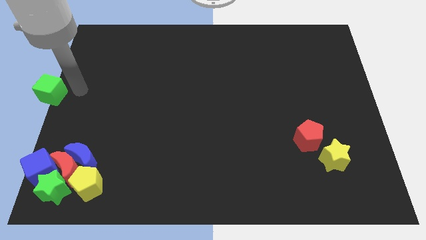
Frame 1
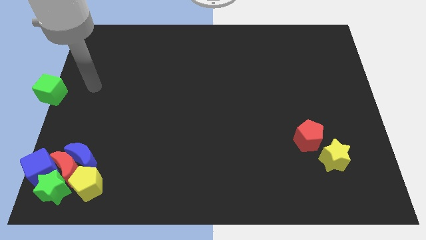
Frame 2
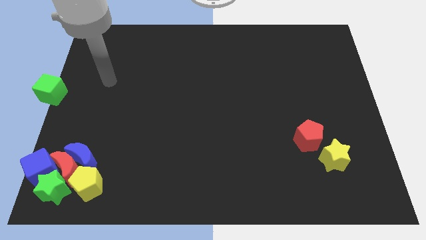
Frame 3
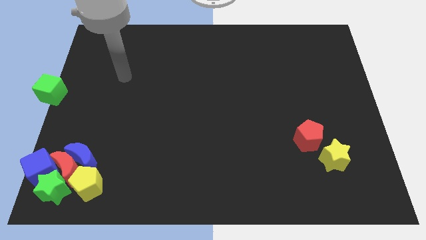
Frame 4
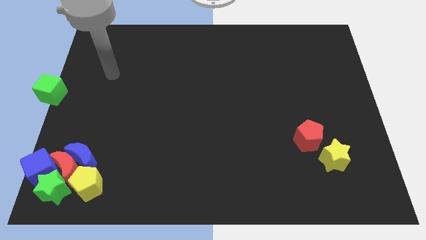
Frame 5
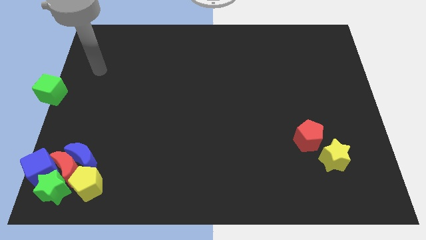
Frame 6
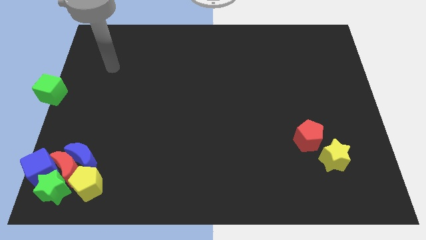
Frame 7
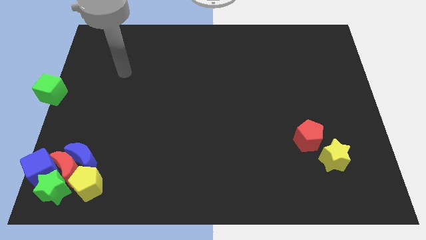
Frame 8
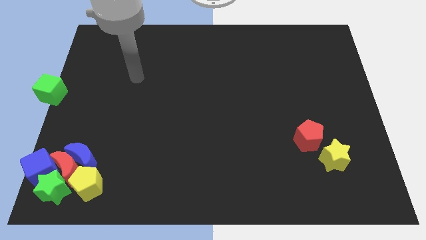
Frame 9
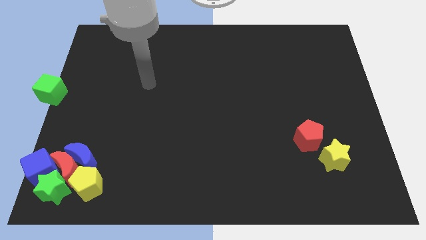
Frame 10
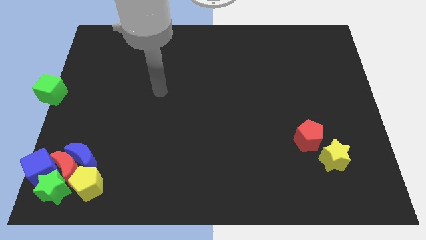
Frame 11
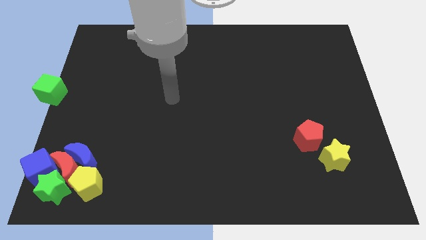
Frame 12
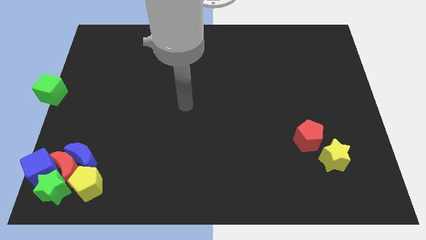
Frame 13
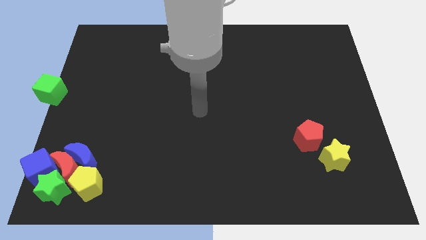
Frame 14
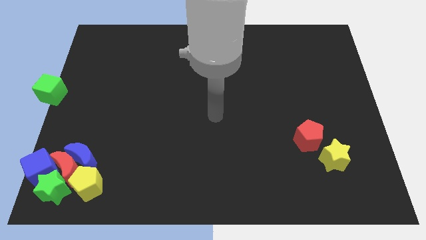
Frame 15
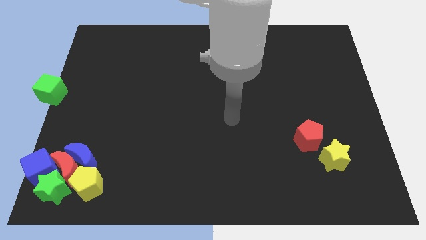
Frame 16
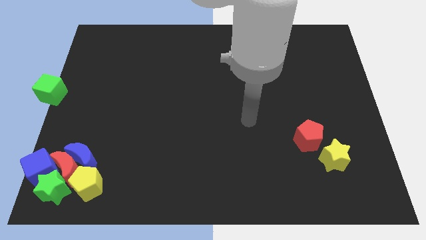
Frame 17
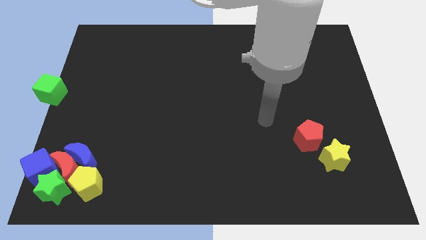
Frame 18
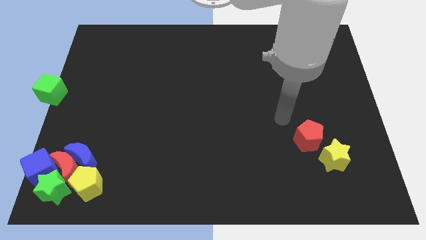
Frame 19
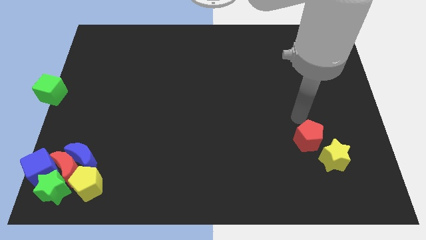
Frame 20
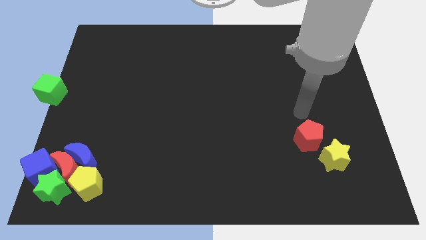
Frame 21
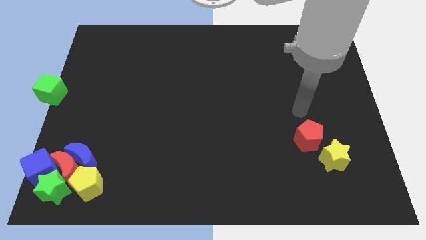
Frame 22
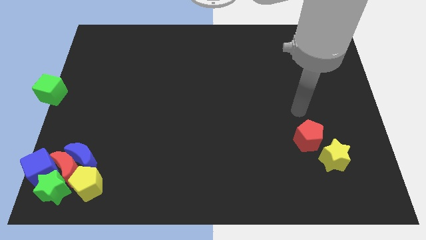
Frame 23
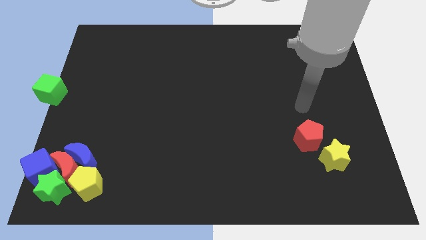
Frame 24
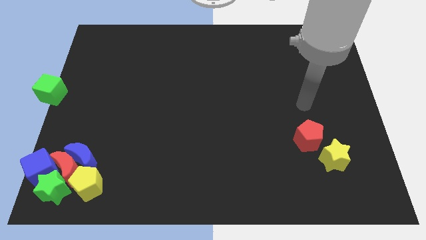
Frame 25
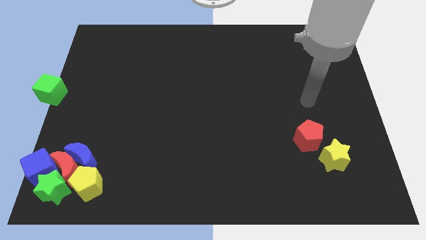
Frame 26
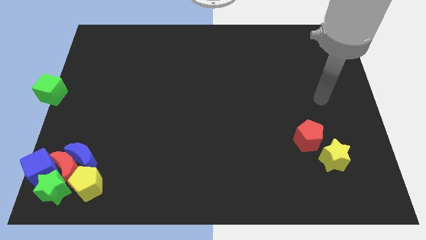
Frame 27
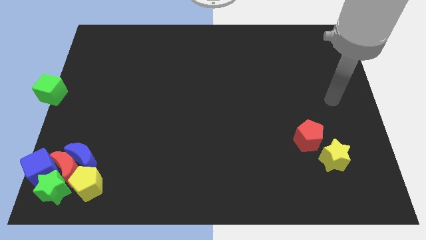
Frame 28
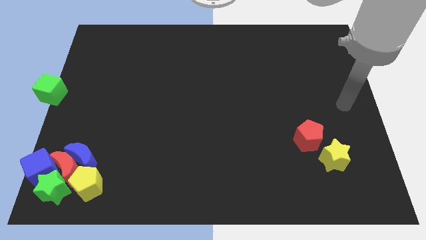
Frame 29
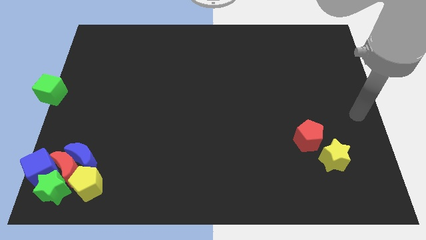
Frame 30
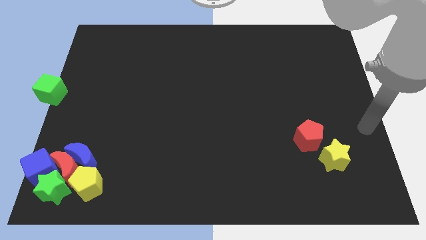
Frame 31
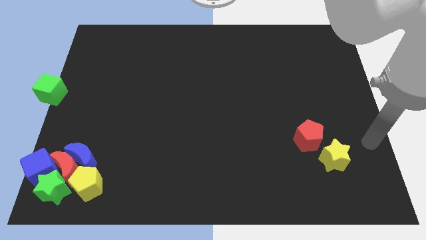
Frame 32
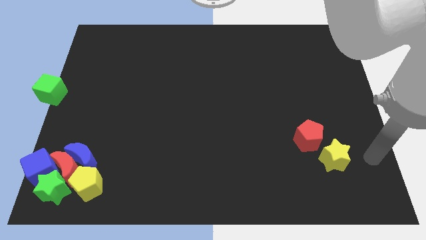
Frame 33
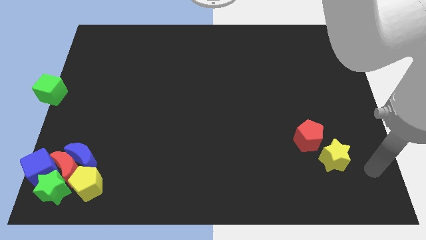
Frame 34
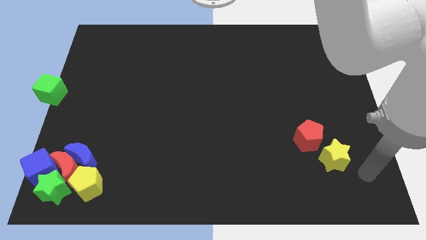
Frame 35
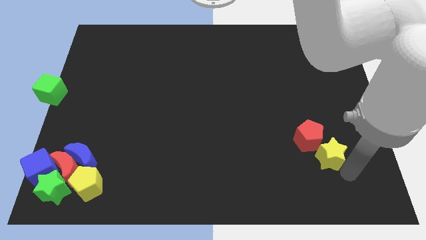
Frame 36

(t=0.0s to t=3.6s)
move the arm to the bottom right of the yellow star

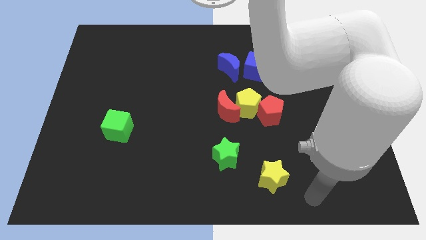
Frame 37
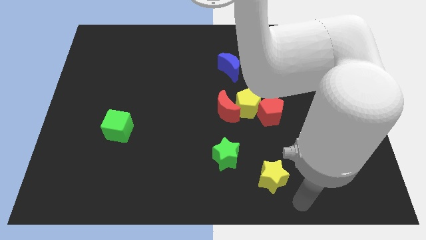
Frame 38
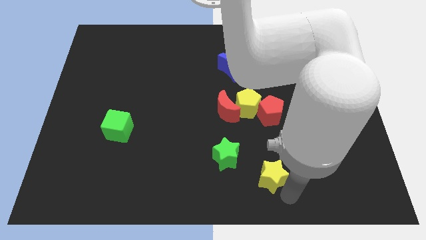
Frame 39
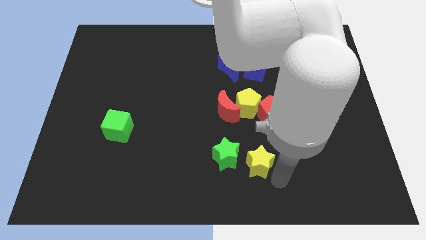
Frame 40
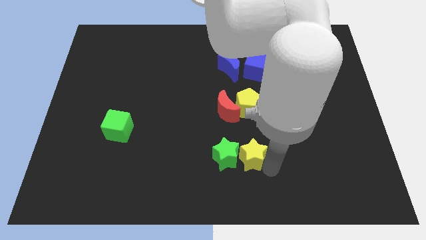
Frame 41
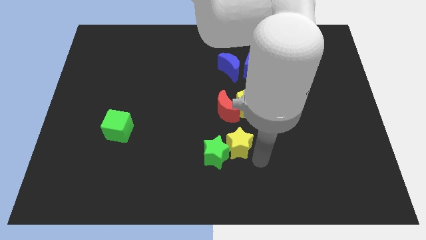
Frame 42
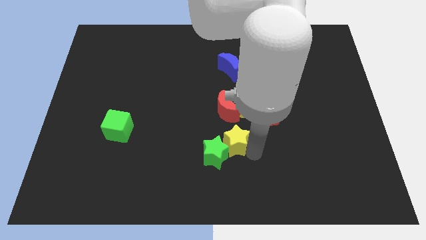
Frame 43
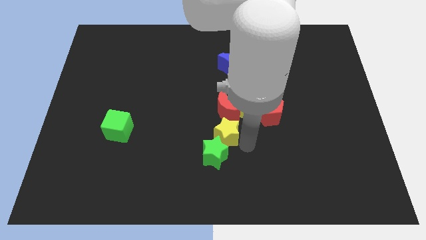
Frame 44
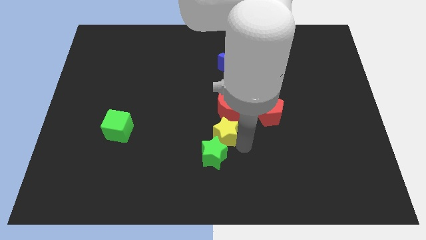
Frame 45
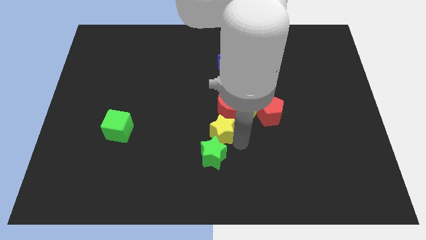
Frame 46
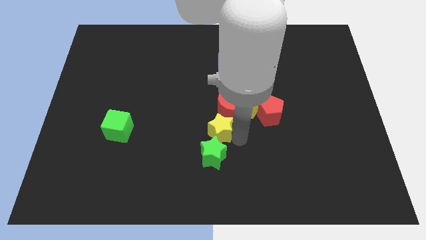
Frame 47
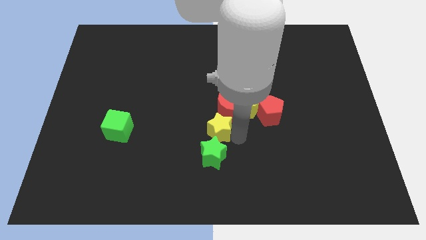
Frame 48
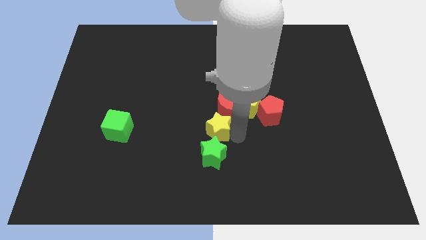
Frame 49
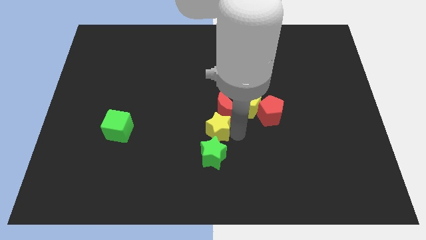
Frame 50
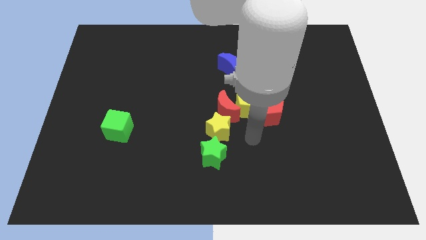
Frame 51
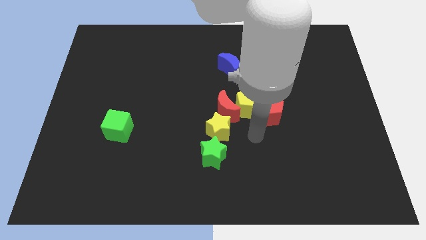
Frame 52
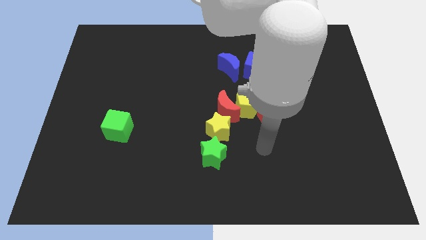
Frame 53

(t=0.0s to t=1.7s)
place the yellow star in between the red moon and the green star

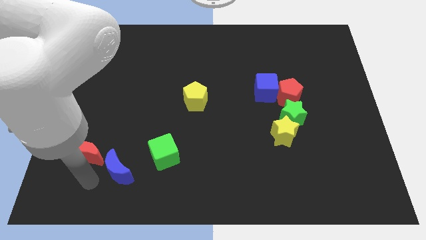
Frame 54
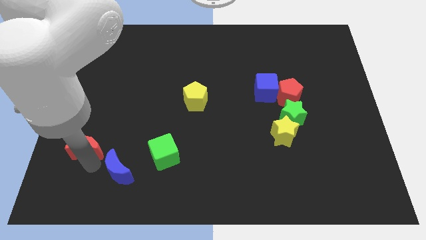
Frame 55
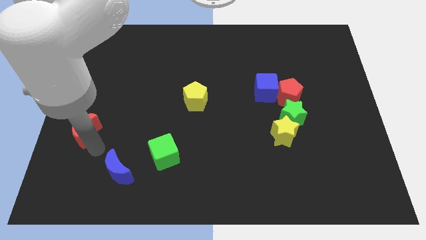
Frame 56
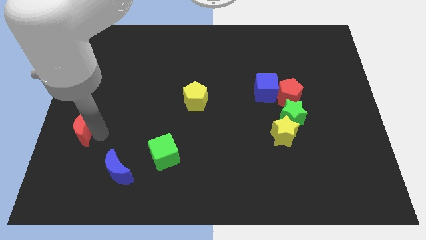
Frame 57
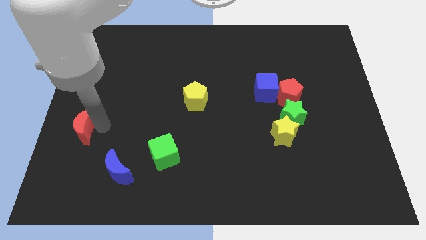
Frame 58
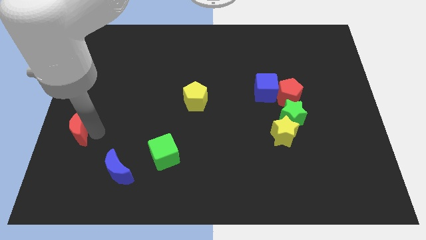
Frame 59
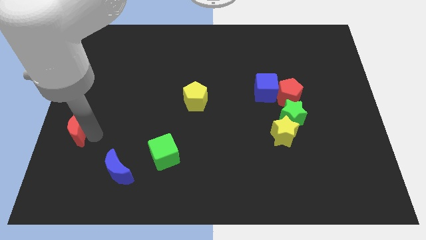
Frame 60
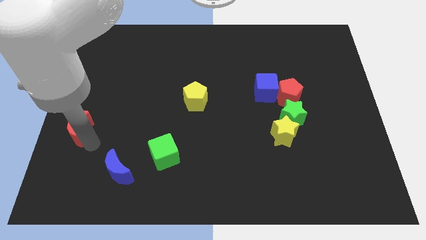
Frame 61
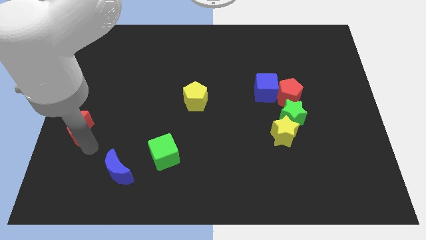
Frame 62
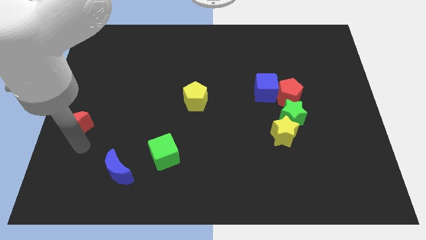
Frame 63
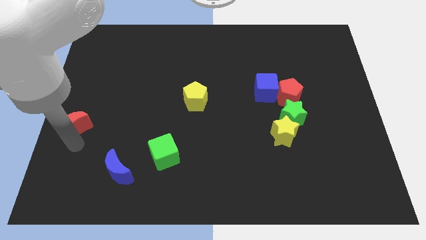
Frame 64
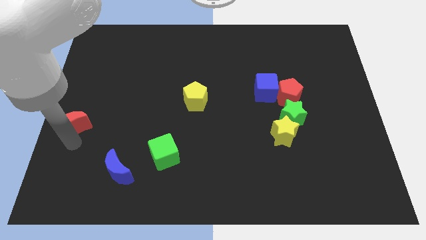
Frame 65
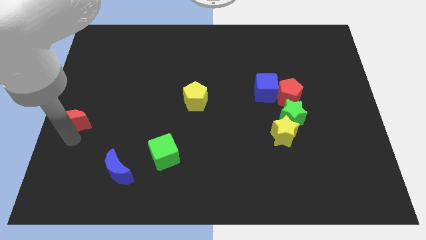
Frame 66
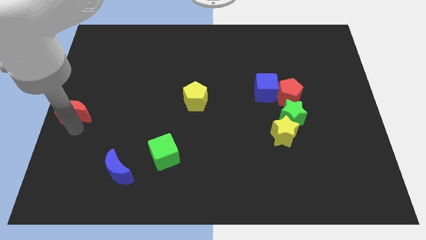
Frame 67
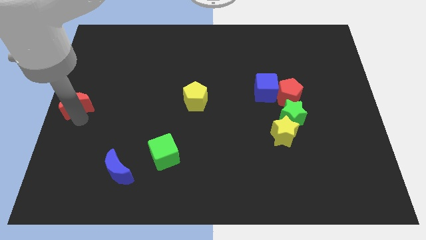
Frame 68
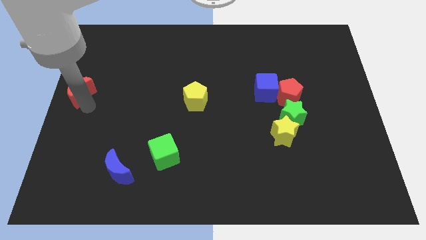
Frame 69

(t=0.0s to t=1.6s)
place the red moon left to the yellow pentagon

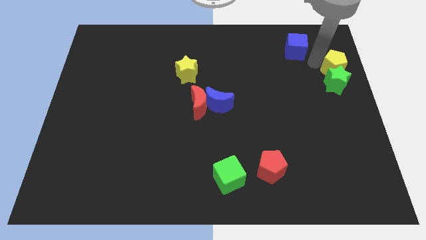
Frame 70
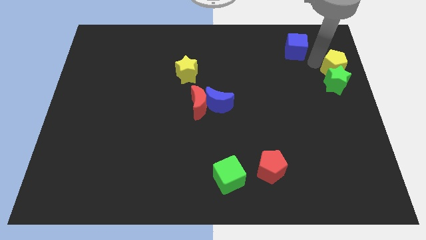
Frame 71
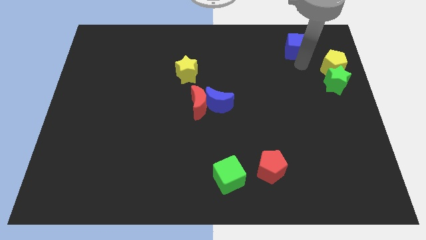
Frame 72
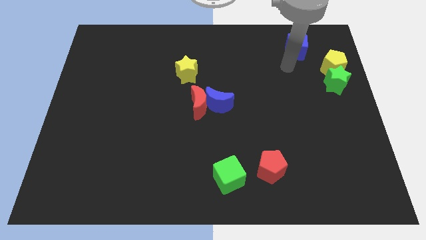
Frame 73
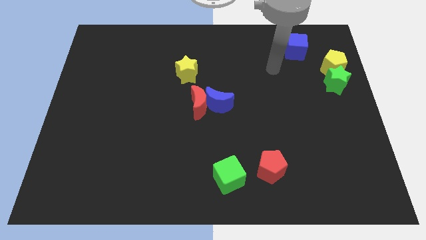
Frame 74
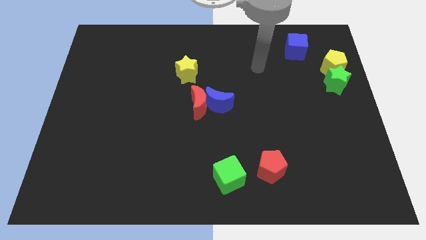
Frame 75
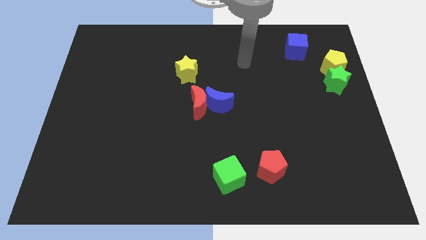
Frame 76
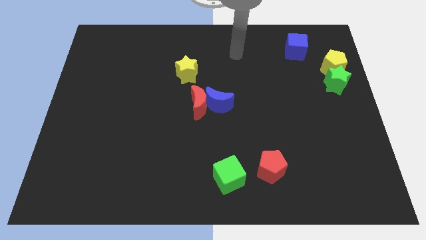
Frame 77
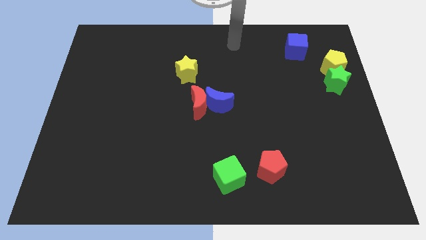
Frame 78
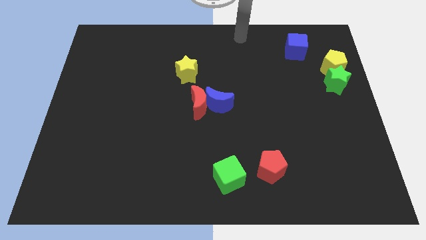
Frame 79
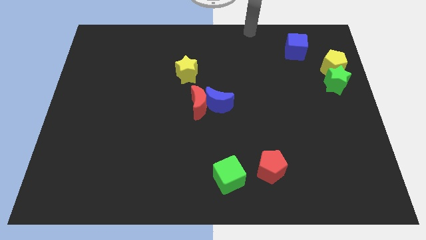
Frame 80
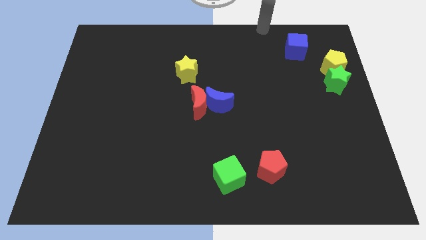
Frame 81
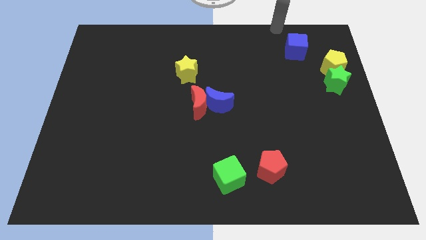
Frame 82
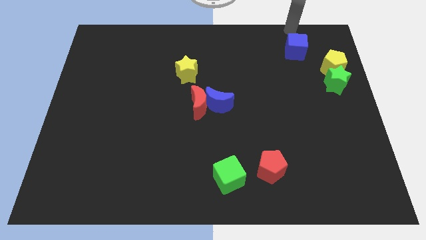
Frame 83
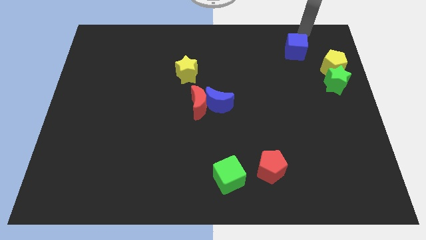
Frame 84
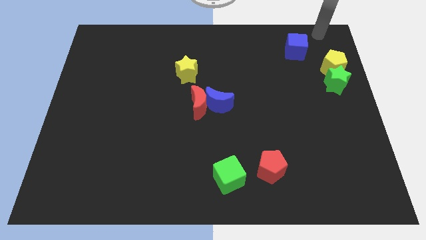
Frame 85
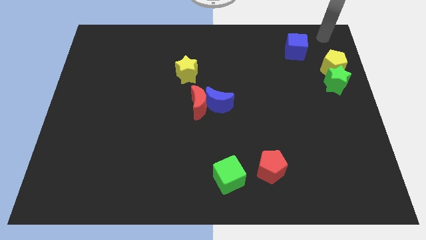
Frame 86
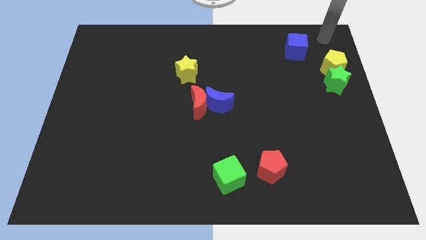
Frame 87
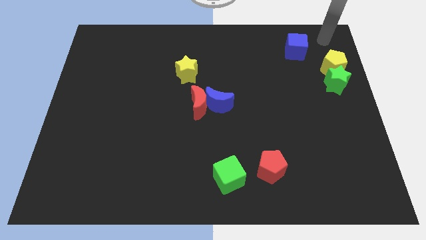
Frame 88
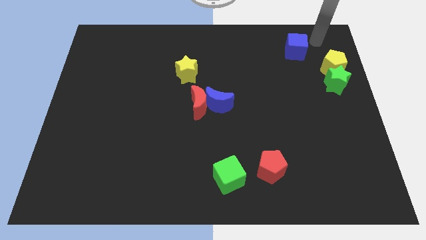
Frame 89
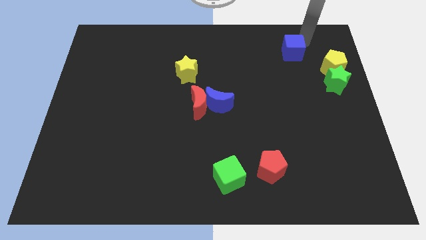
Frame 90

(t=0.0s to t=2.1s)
move yourself away from the yellow pentagon
